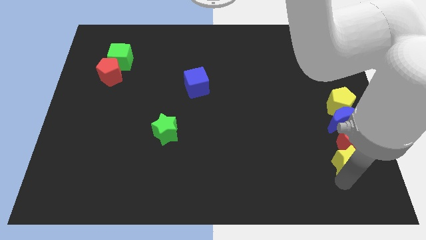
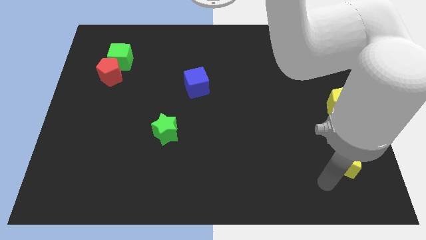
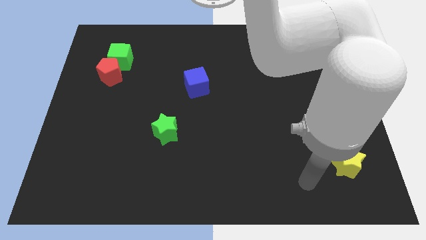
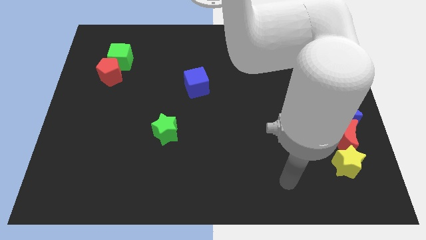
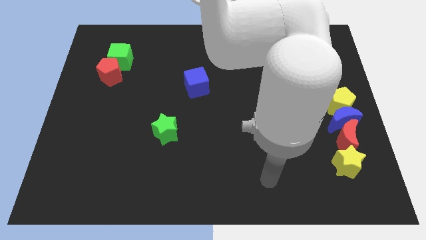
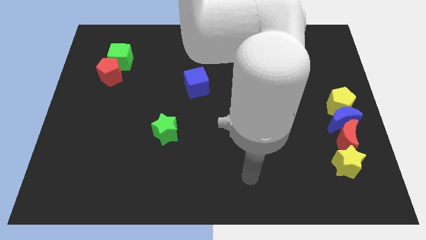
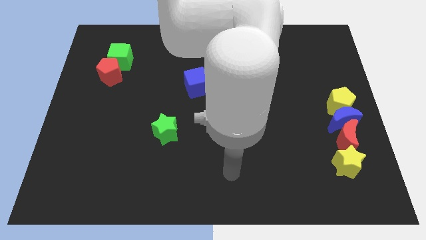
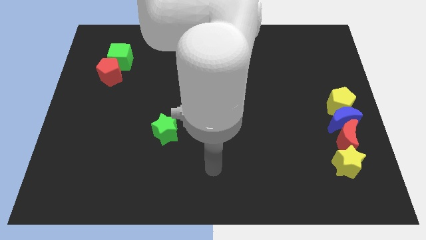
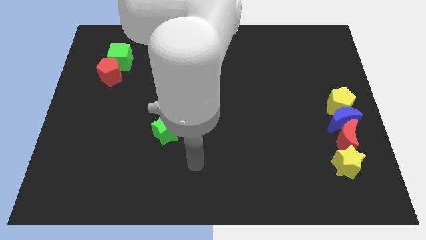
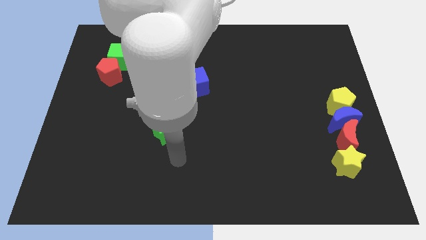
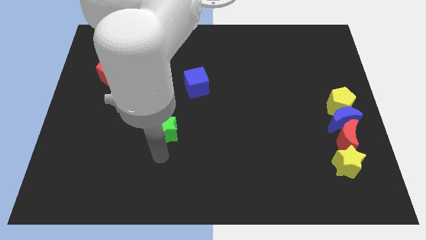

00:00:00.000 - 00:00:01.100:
point your arm below green star

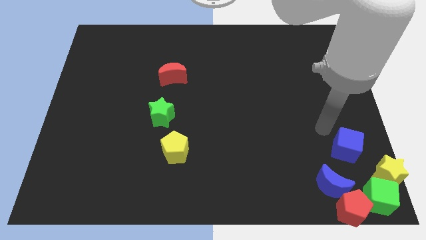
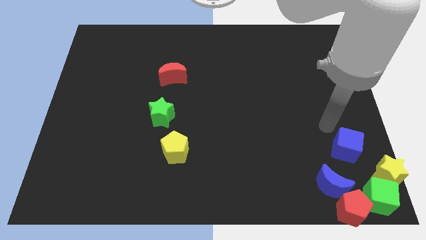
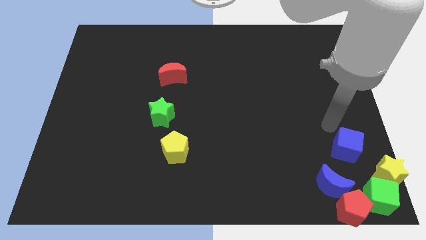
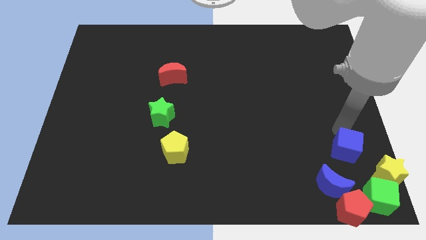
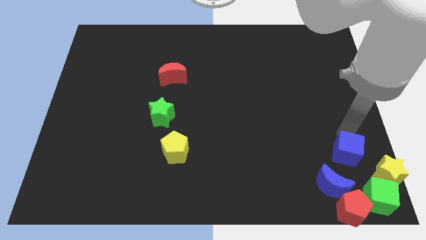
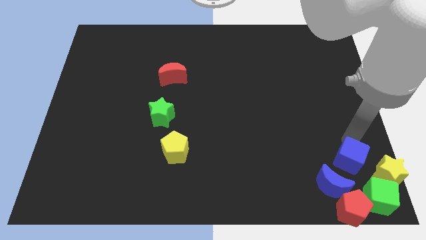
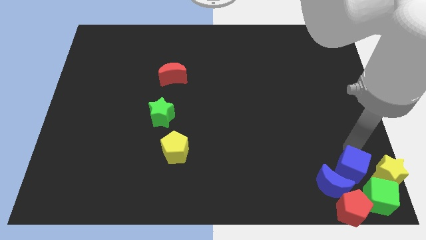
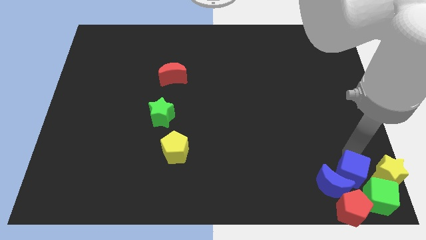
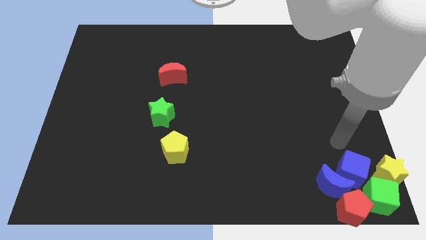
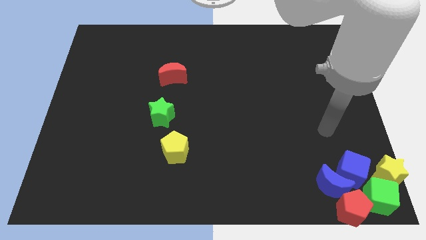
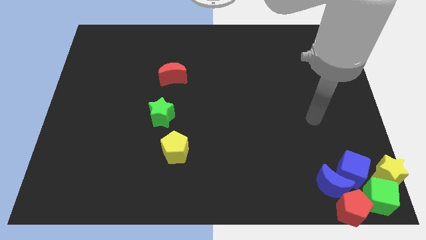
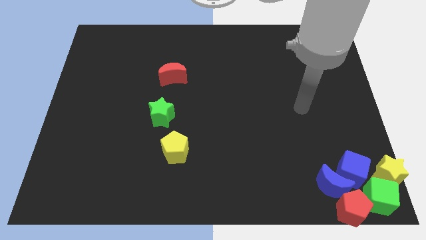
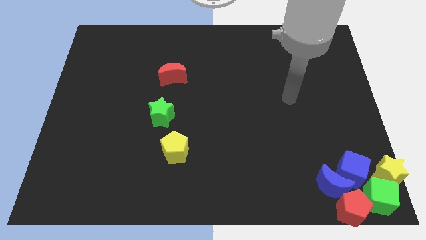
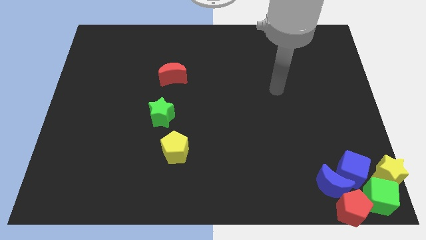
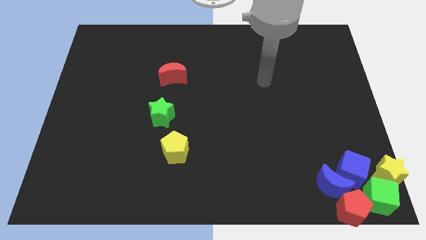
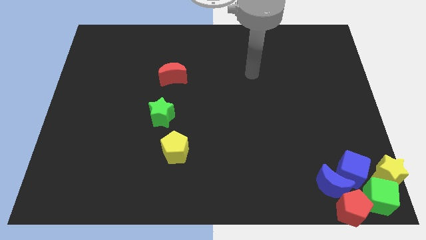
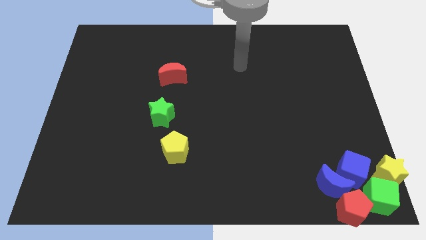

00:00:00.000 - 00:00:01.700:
push the blue cube into the blue moon

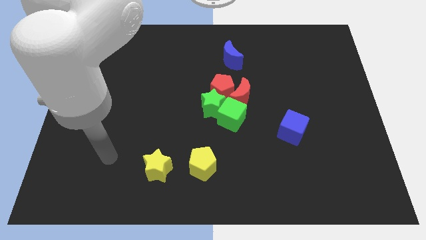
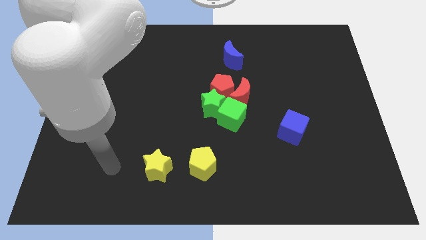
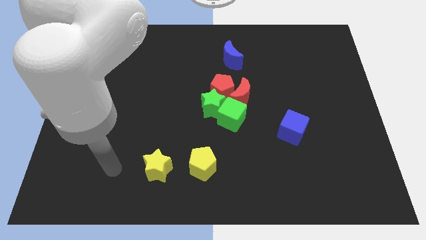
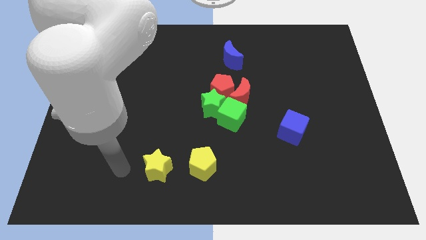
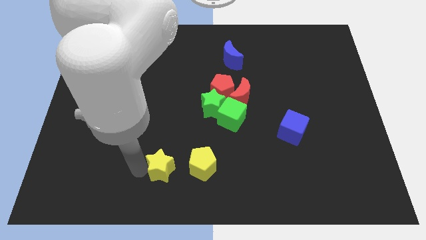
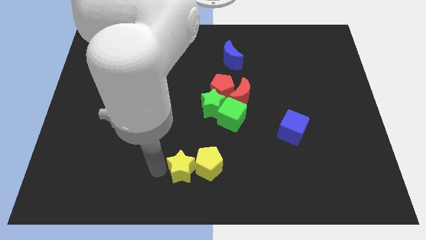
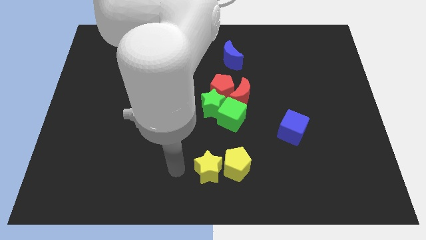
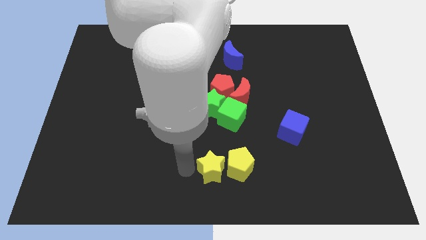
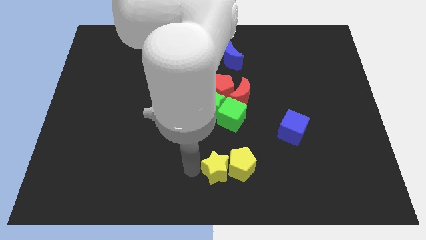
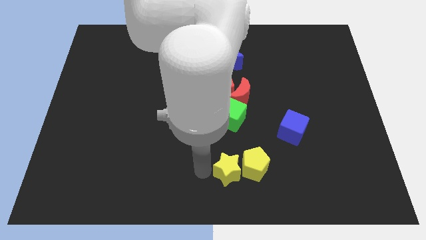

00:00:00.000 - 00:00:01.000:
push the yellow star in to the yellow pentagon

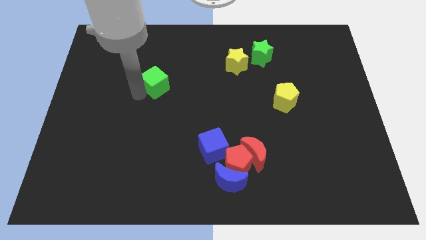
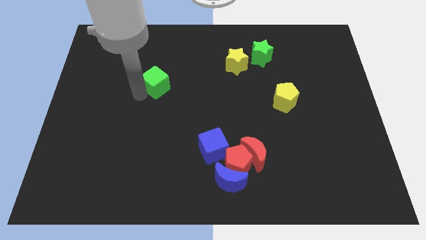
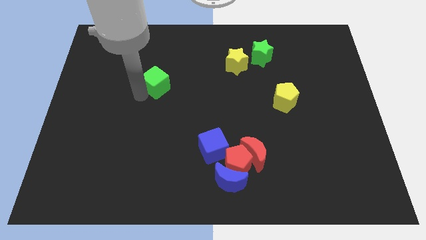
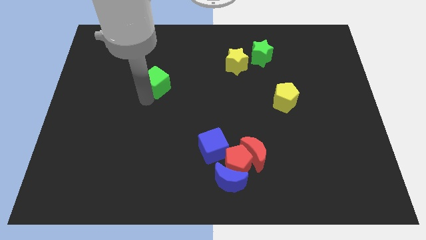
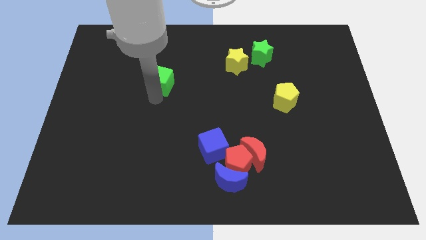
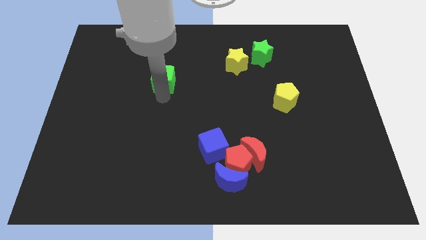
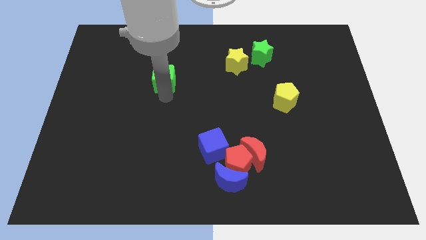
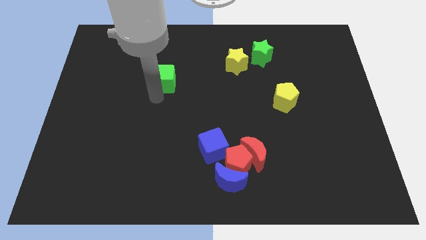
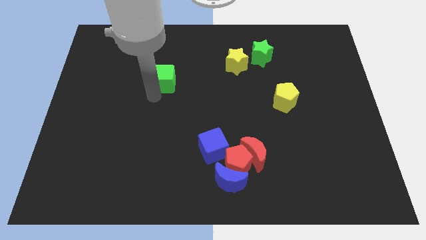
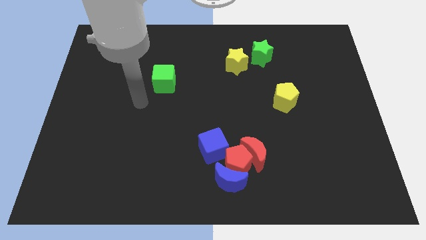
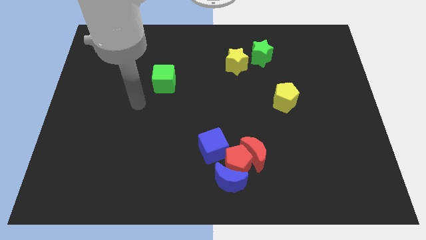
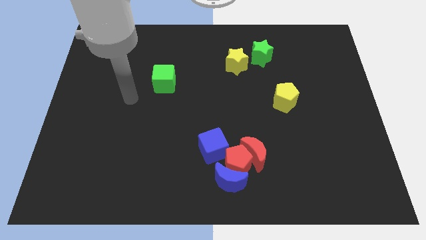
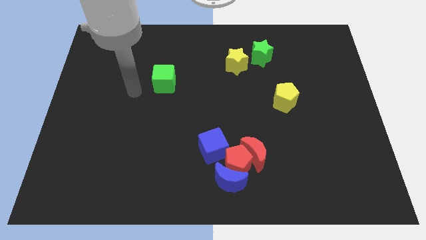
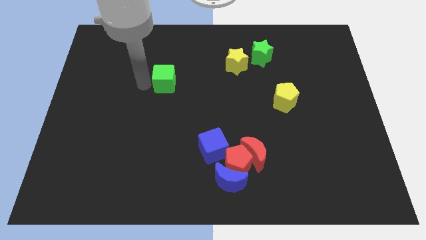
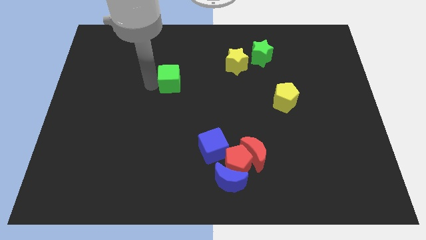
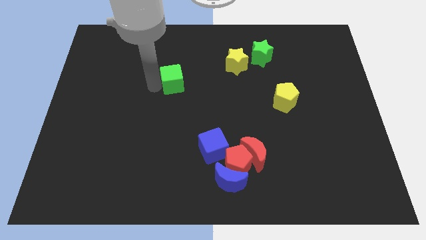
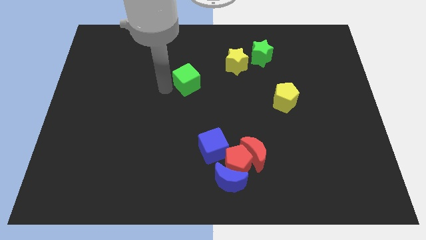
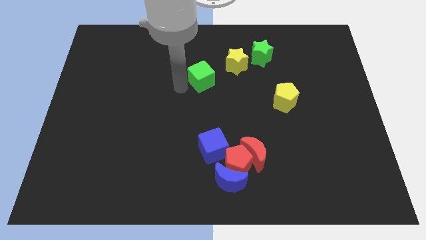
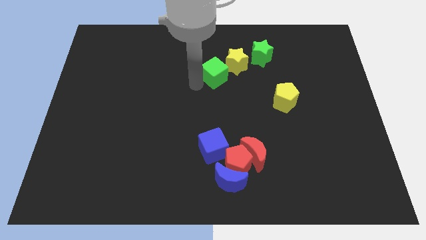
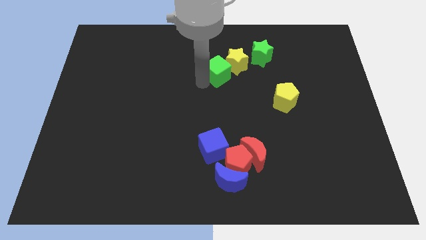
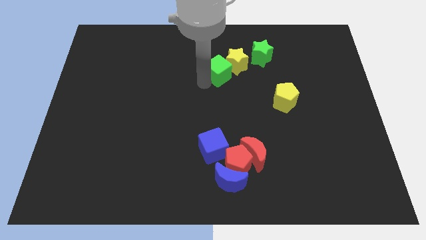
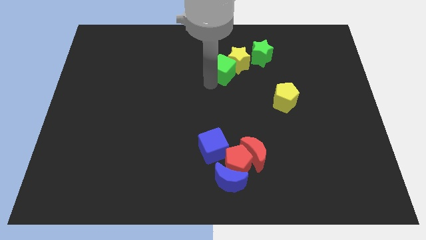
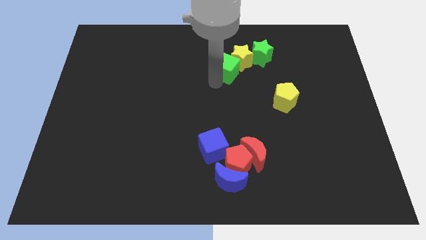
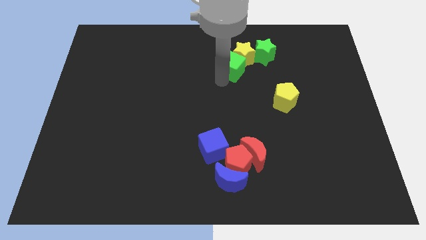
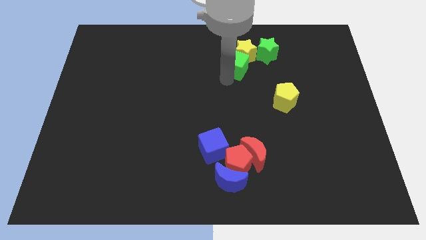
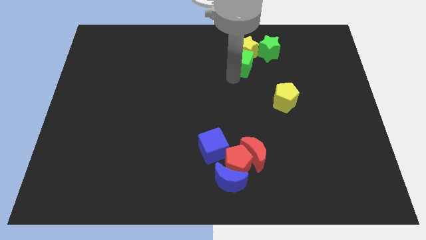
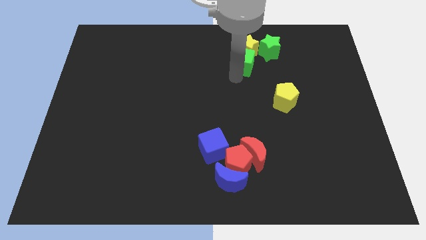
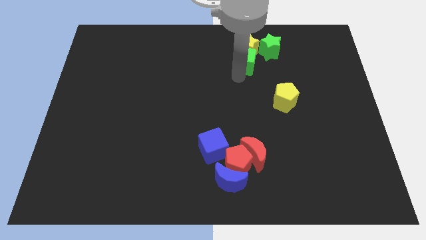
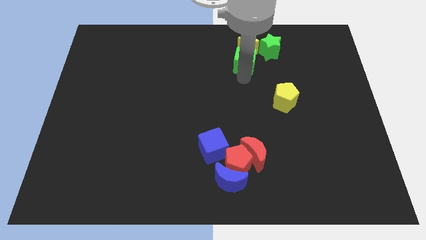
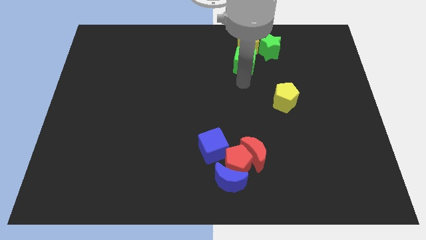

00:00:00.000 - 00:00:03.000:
push the green cube into the bottom of the yellow star

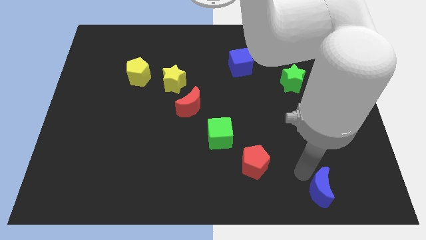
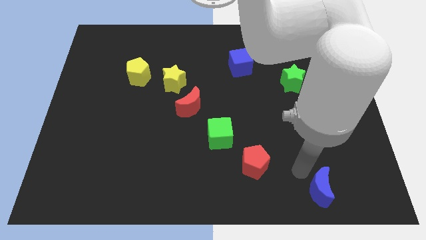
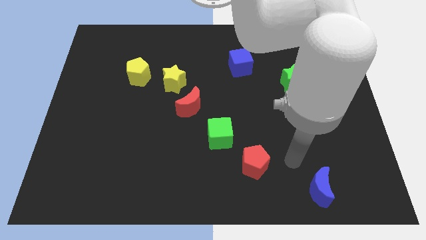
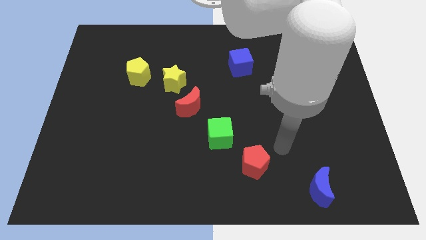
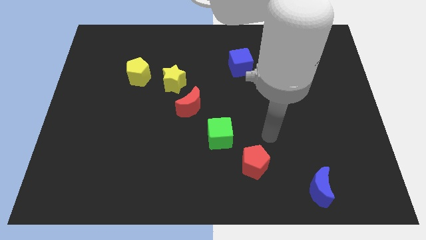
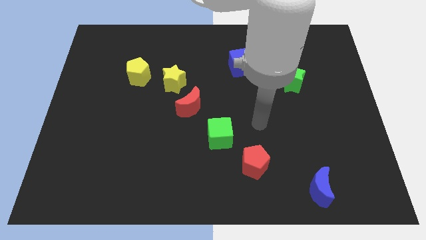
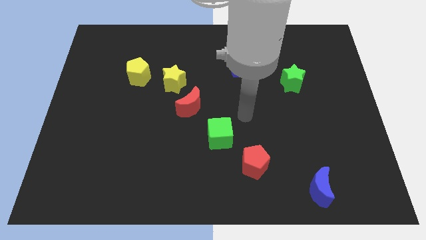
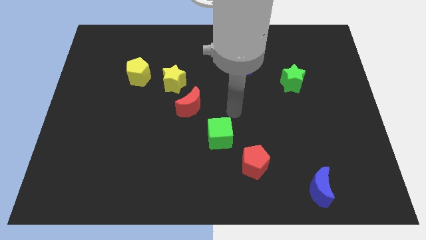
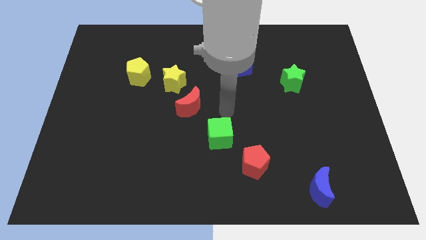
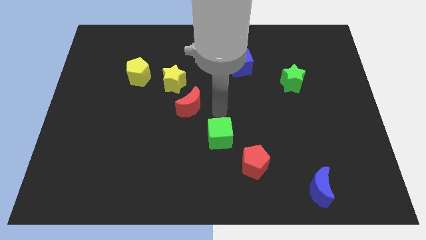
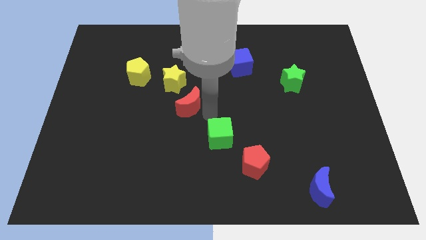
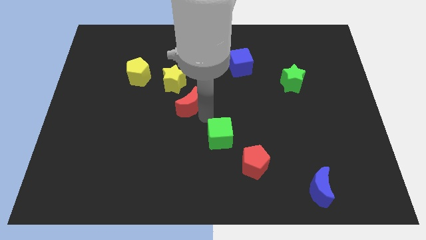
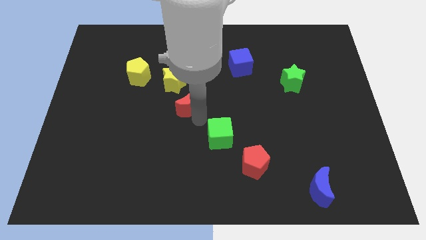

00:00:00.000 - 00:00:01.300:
place arm in between red moon and green cube

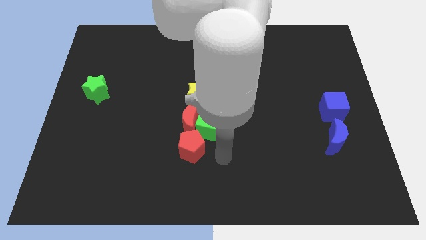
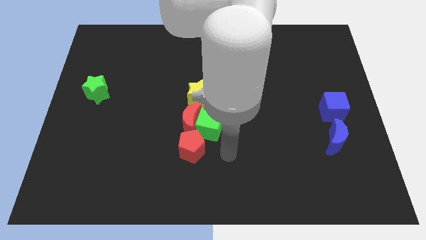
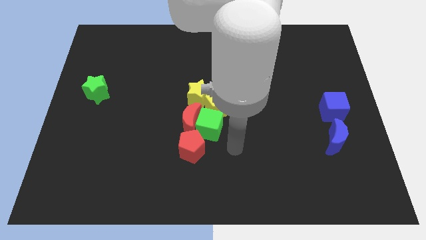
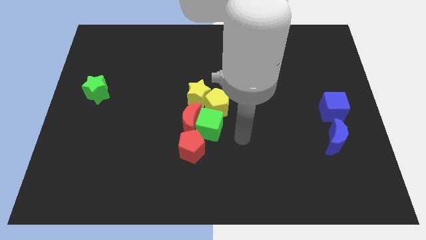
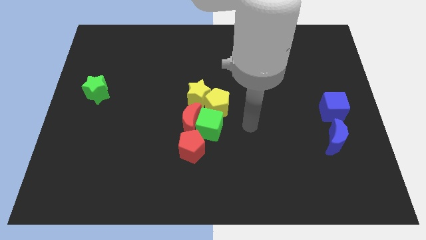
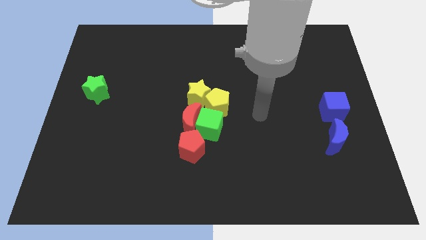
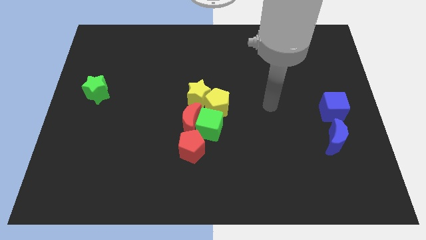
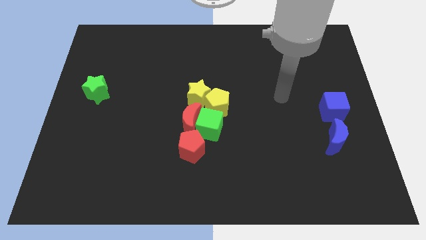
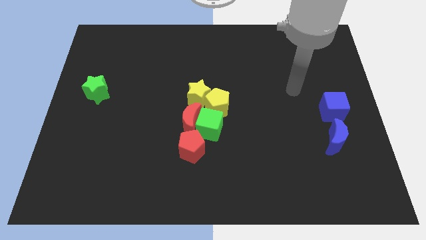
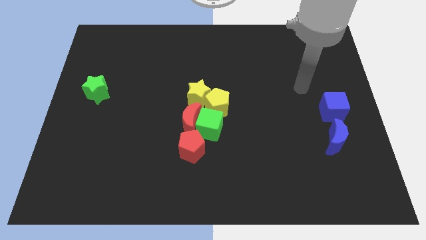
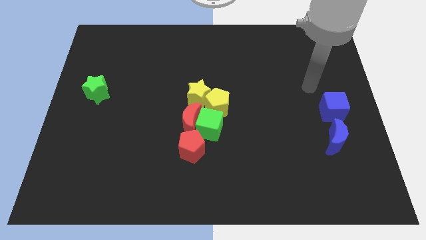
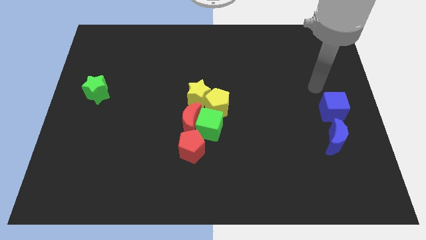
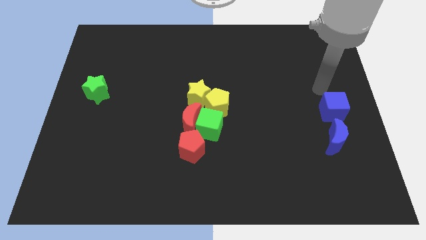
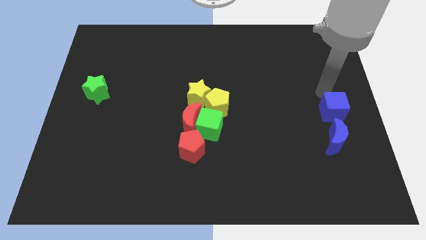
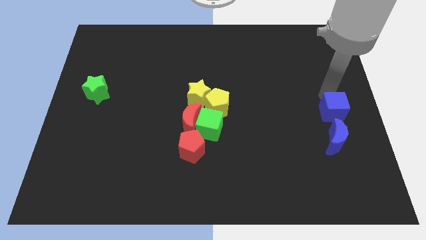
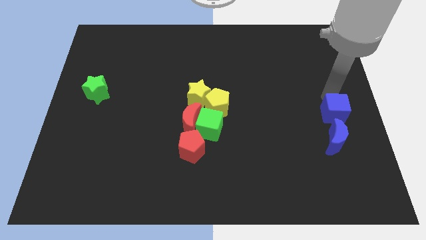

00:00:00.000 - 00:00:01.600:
tap the blue cube
